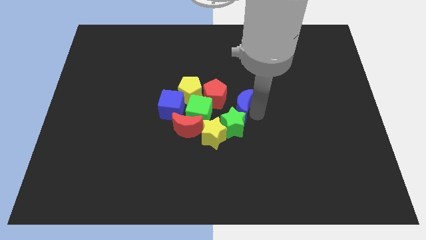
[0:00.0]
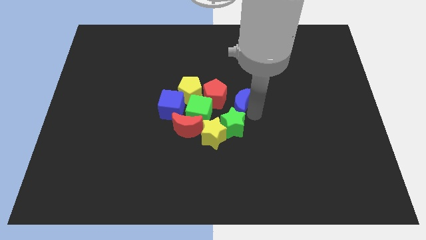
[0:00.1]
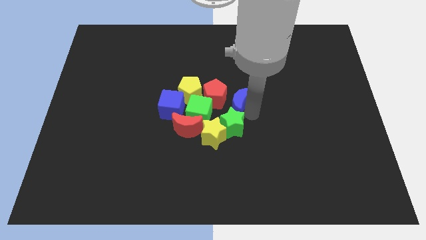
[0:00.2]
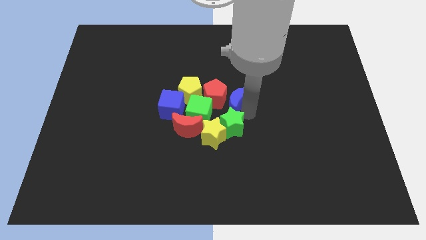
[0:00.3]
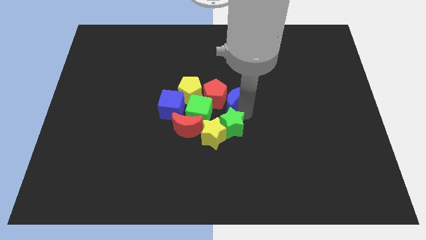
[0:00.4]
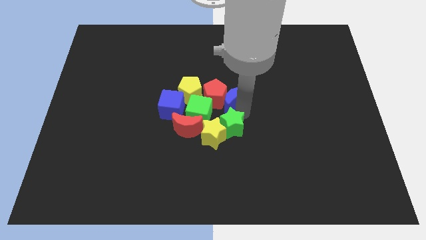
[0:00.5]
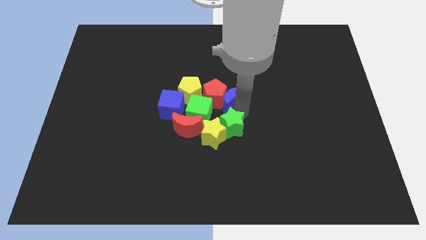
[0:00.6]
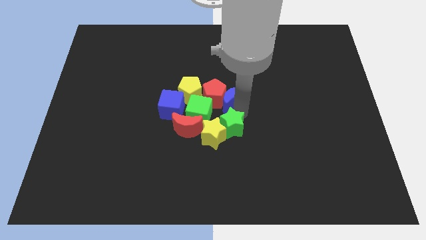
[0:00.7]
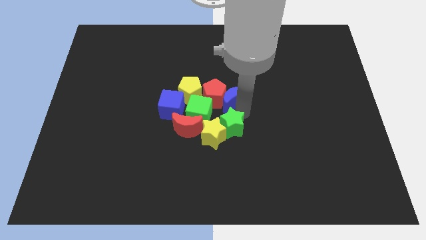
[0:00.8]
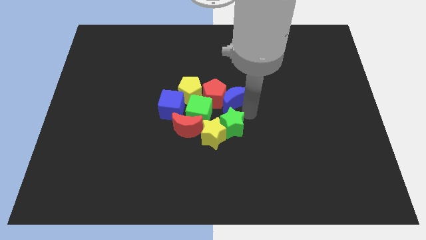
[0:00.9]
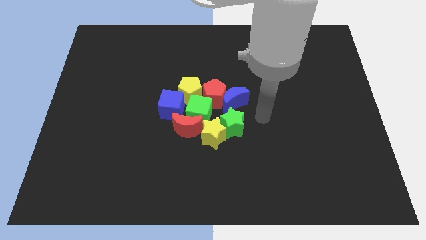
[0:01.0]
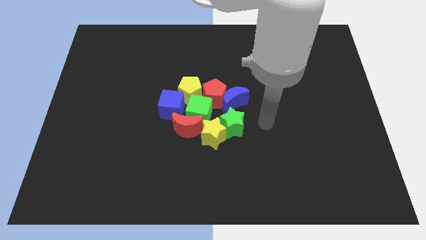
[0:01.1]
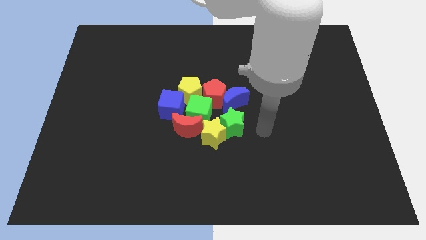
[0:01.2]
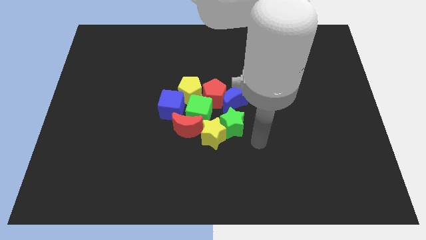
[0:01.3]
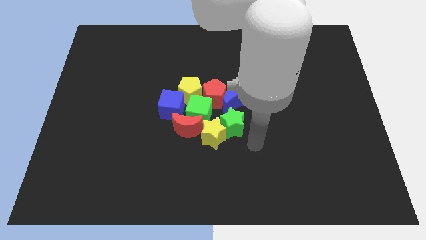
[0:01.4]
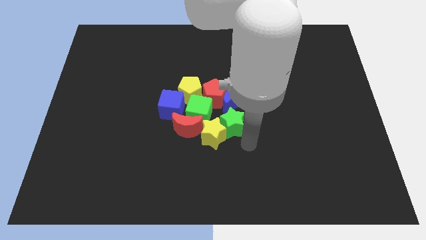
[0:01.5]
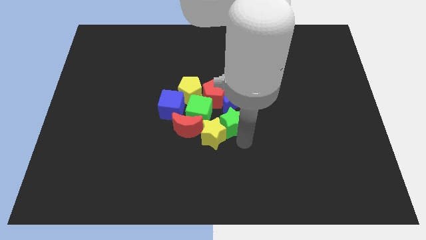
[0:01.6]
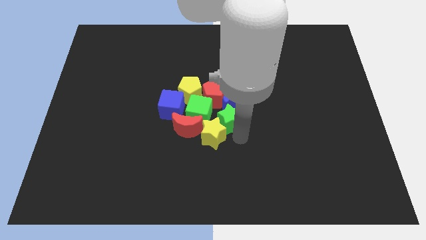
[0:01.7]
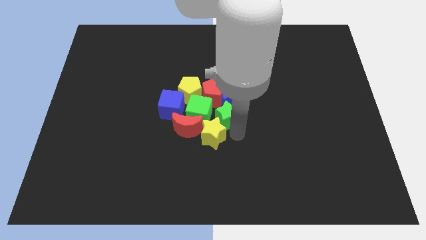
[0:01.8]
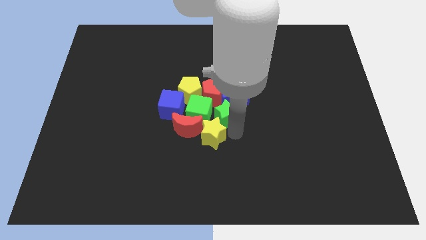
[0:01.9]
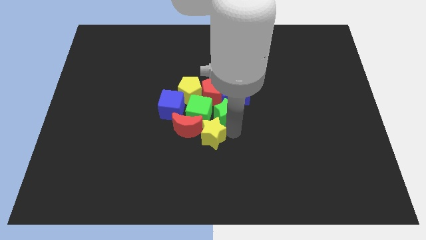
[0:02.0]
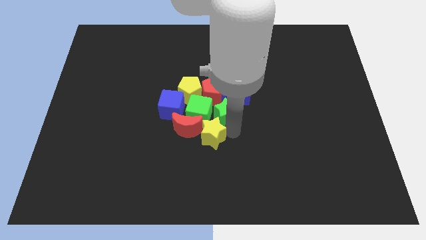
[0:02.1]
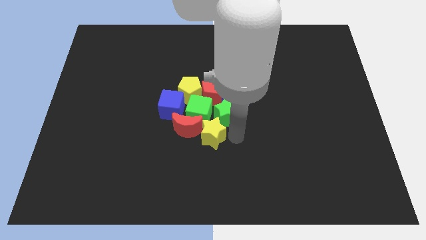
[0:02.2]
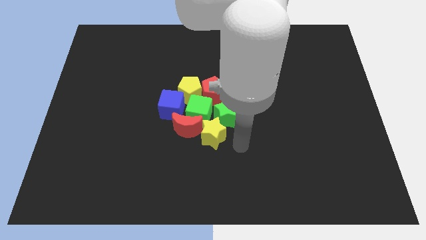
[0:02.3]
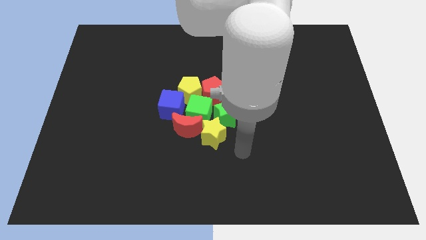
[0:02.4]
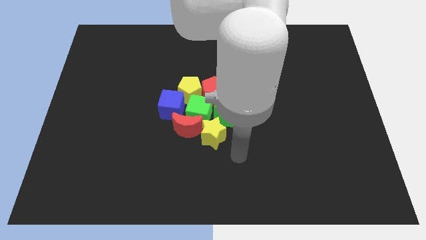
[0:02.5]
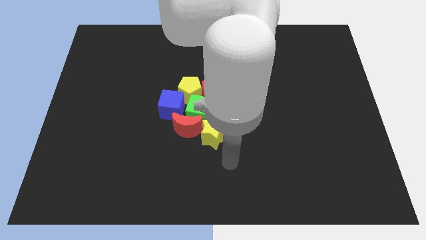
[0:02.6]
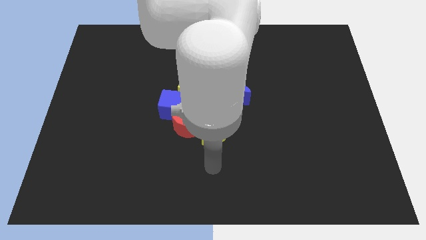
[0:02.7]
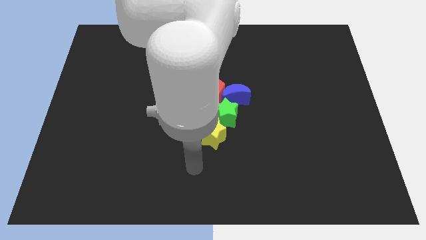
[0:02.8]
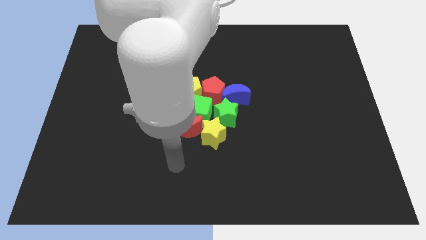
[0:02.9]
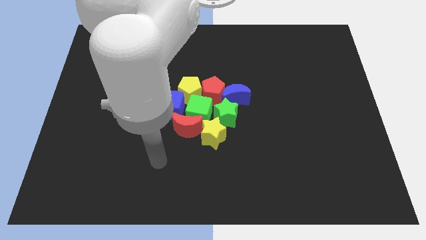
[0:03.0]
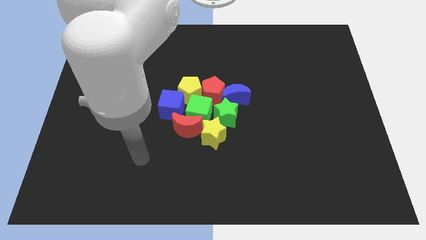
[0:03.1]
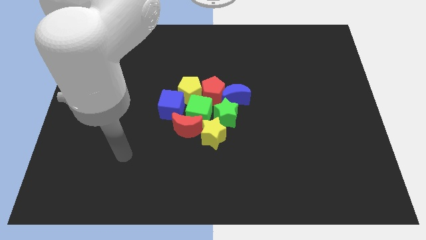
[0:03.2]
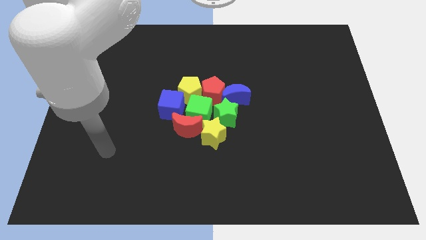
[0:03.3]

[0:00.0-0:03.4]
move green star to the right of the green cube

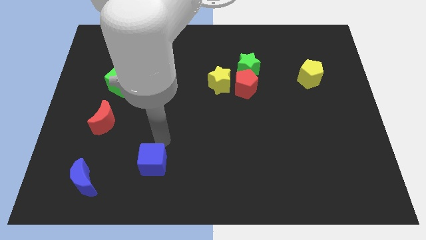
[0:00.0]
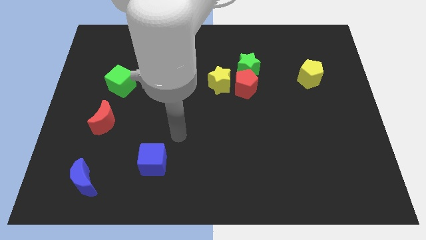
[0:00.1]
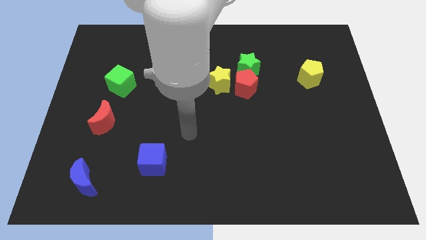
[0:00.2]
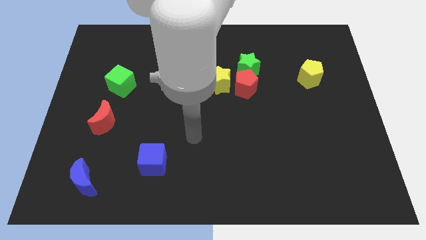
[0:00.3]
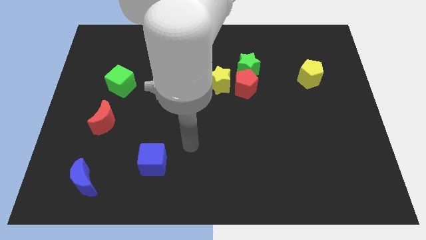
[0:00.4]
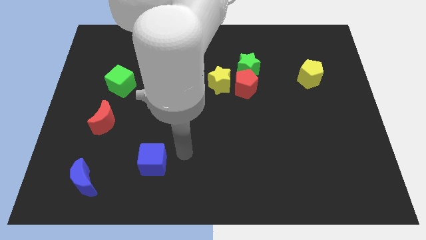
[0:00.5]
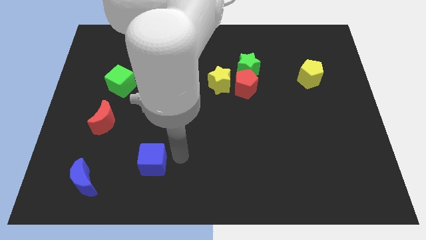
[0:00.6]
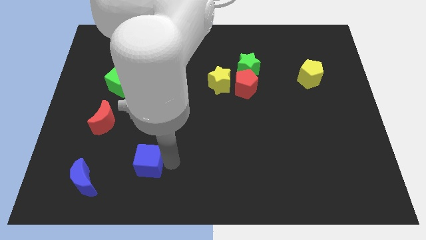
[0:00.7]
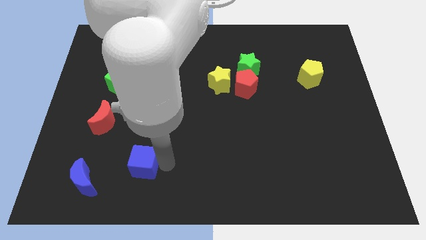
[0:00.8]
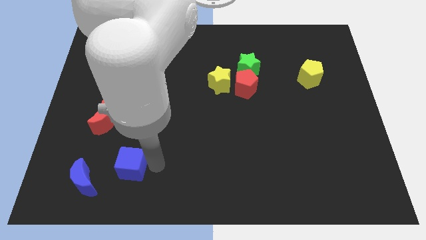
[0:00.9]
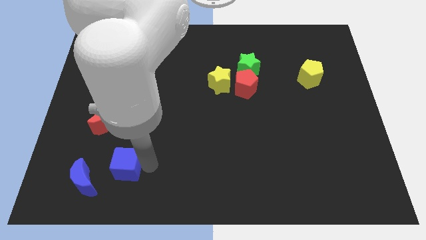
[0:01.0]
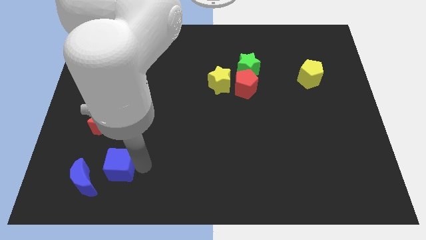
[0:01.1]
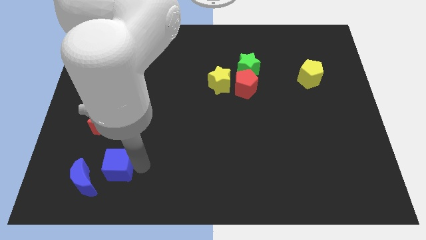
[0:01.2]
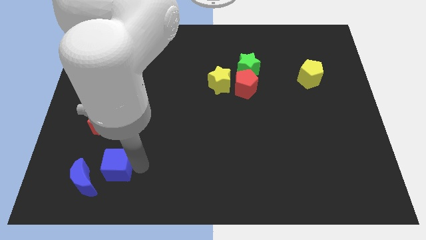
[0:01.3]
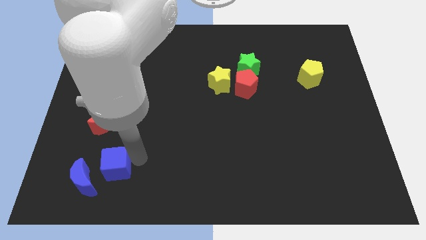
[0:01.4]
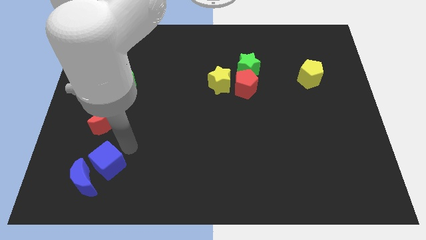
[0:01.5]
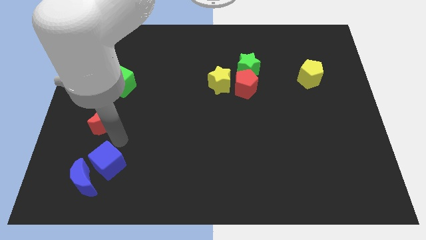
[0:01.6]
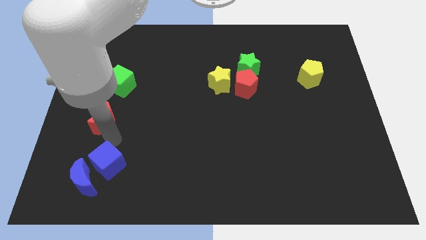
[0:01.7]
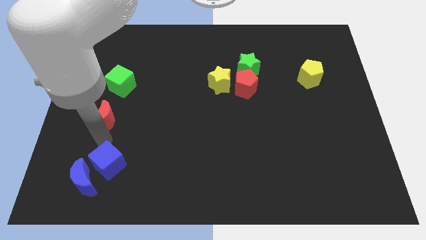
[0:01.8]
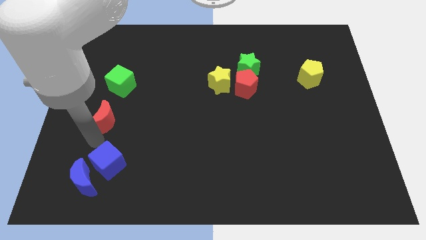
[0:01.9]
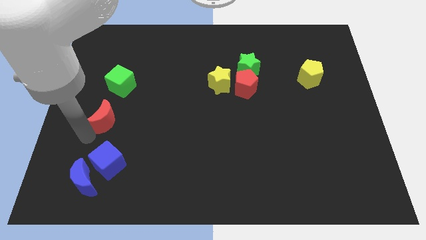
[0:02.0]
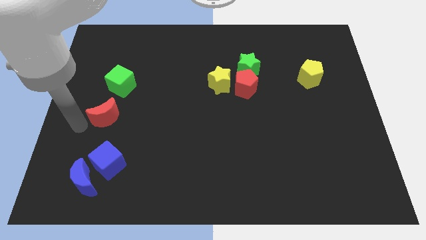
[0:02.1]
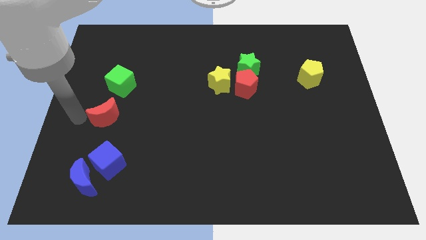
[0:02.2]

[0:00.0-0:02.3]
push the blue cube into the blue moon

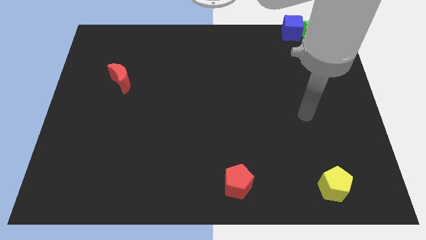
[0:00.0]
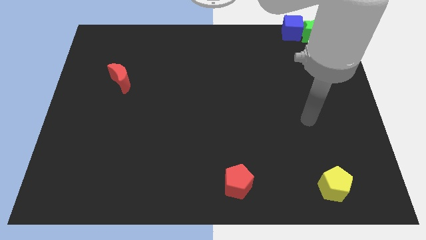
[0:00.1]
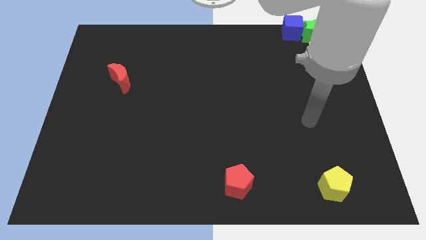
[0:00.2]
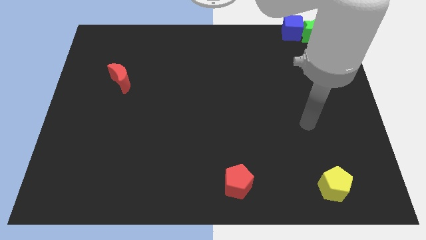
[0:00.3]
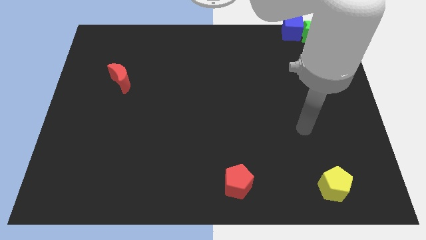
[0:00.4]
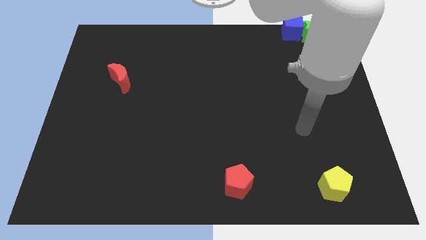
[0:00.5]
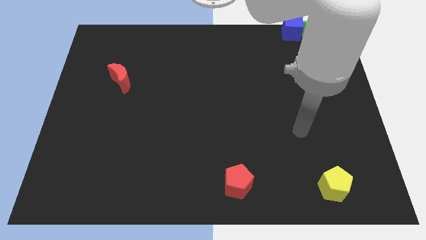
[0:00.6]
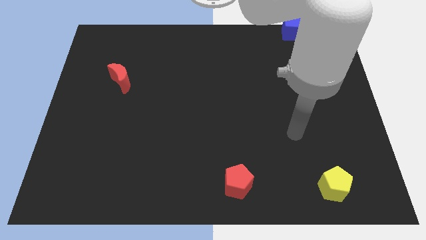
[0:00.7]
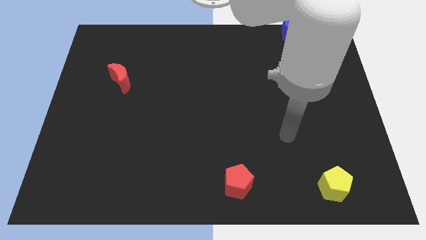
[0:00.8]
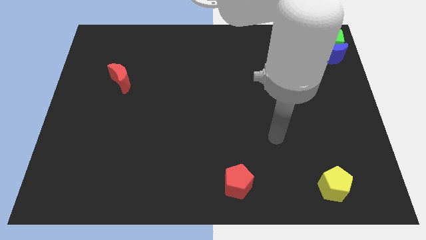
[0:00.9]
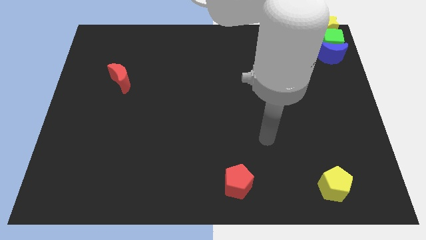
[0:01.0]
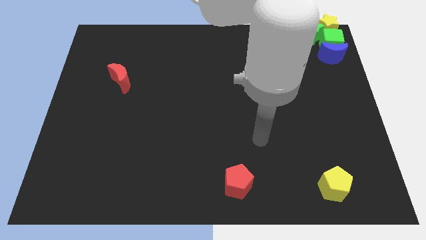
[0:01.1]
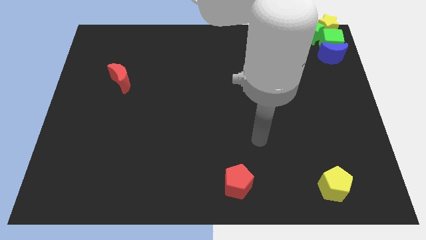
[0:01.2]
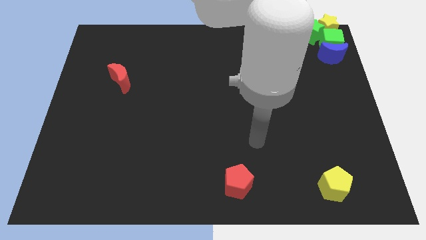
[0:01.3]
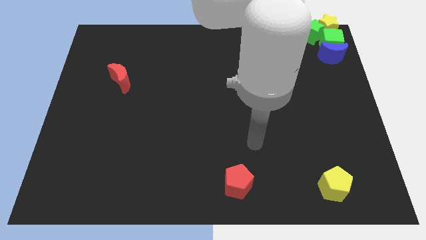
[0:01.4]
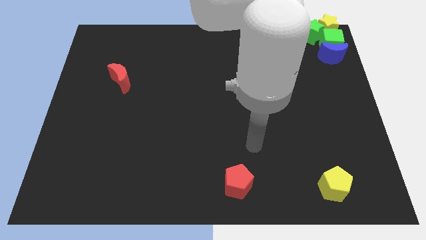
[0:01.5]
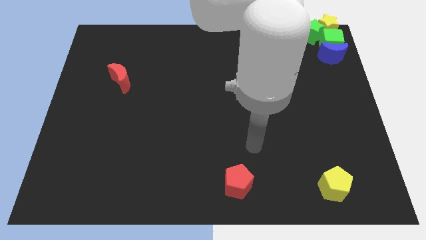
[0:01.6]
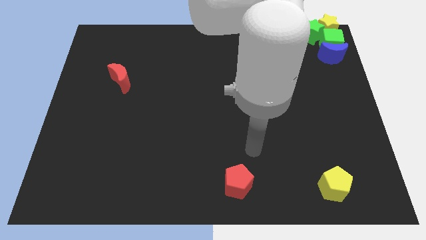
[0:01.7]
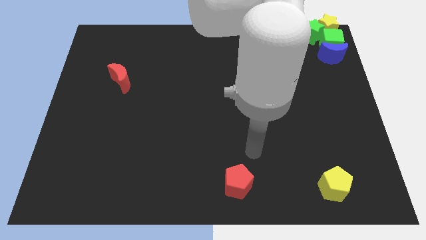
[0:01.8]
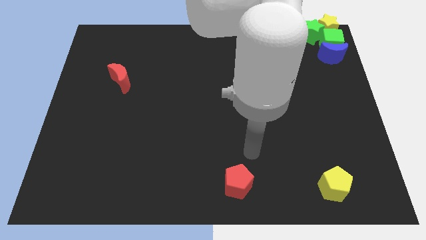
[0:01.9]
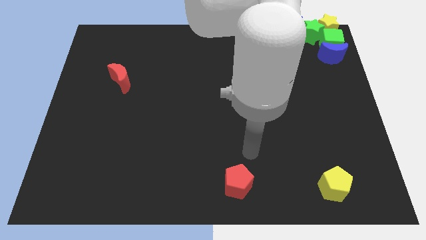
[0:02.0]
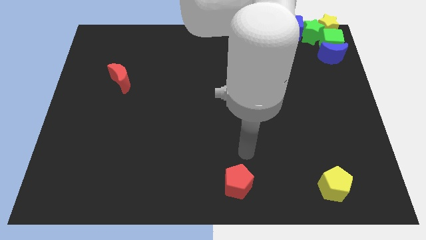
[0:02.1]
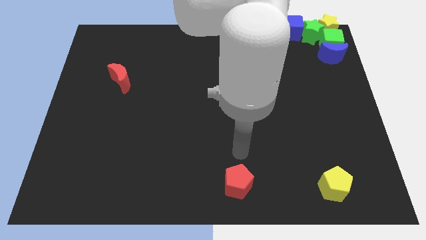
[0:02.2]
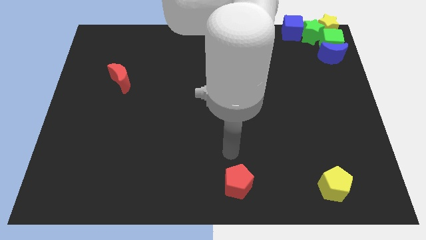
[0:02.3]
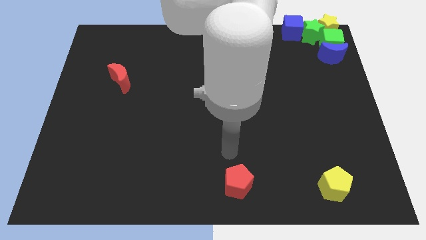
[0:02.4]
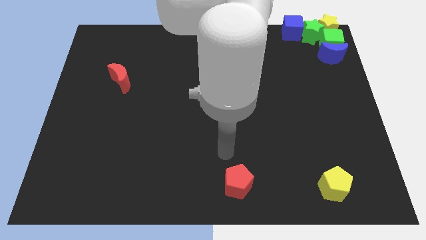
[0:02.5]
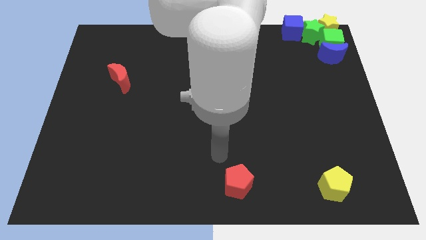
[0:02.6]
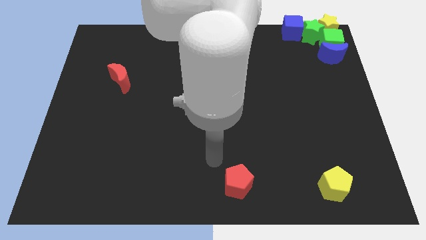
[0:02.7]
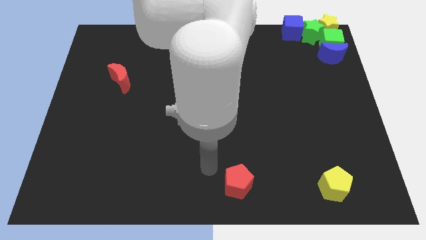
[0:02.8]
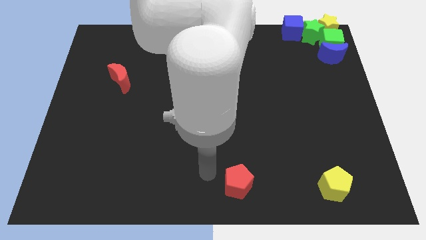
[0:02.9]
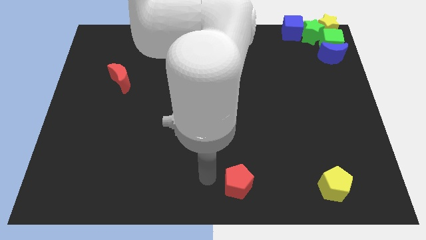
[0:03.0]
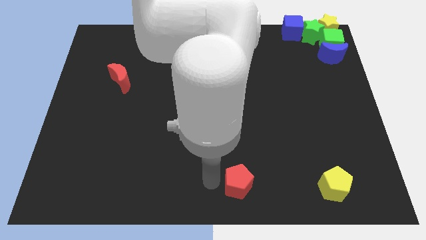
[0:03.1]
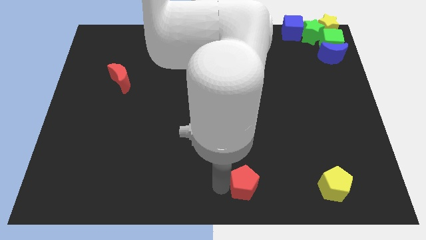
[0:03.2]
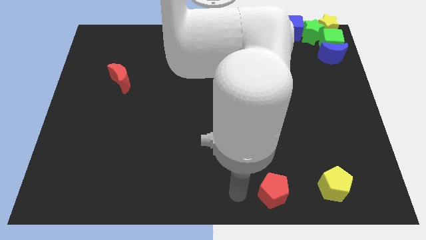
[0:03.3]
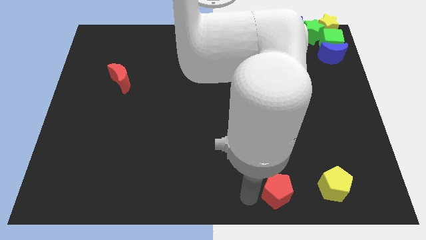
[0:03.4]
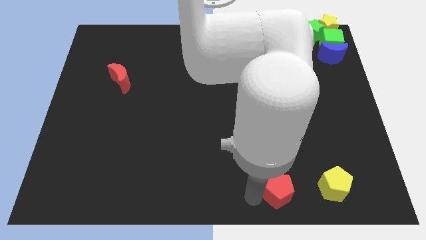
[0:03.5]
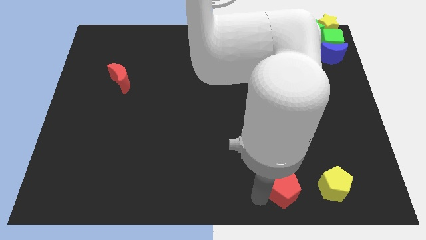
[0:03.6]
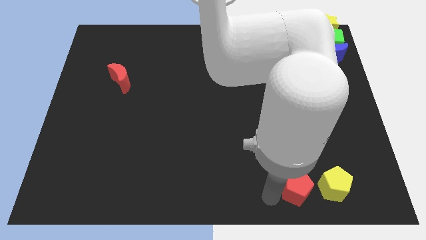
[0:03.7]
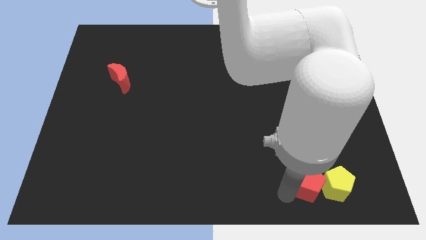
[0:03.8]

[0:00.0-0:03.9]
push the red pentagon to the left of the yellow pentagon
